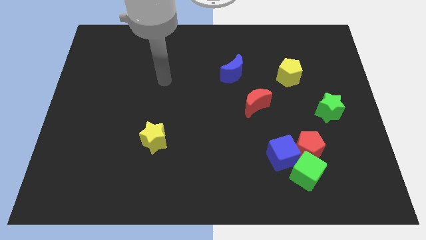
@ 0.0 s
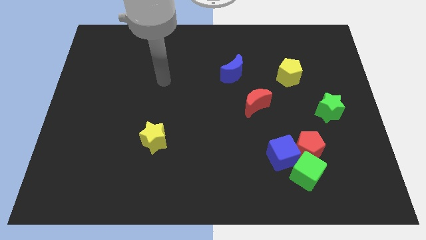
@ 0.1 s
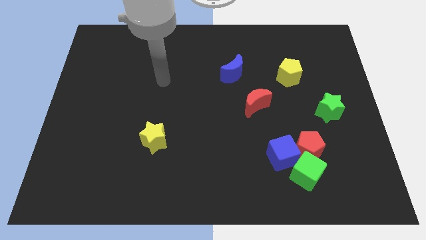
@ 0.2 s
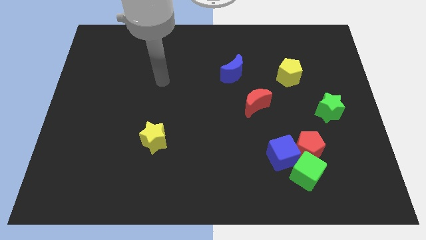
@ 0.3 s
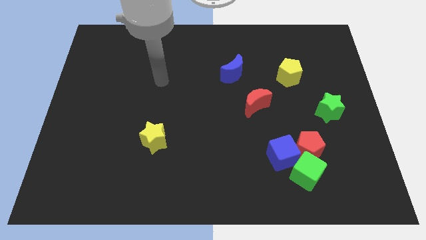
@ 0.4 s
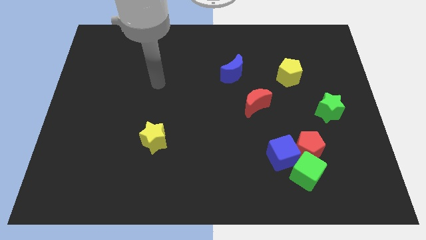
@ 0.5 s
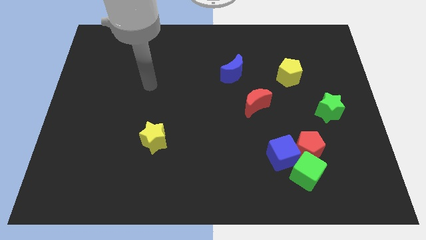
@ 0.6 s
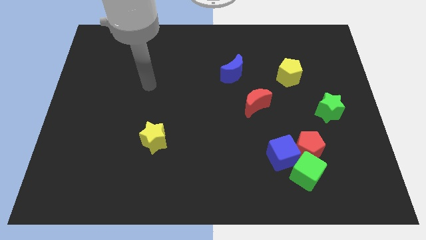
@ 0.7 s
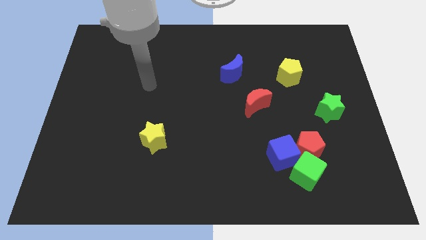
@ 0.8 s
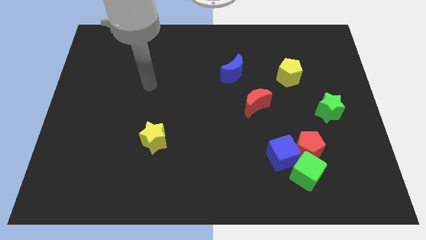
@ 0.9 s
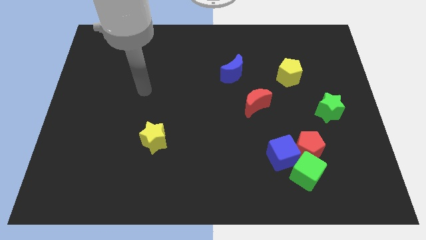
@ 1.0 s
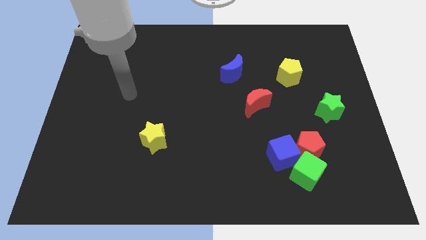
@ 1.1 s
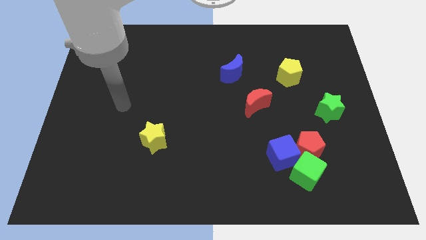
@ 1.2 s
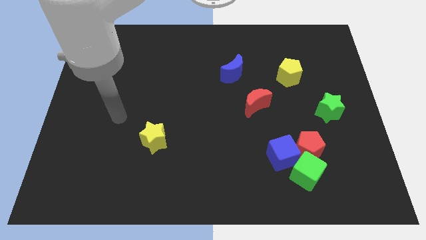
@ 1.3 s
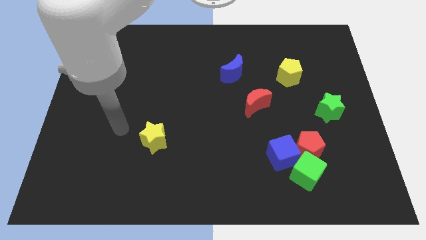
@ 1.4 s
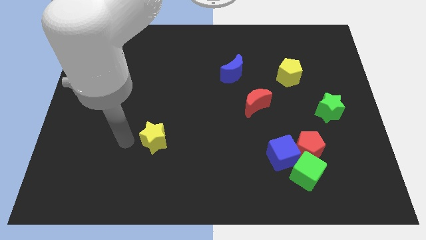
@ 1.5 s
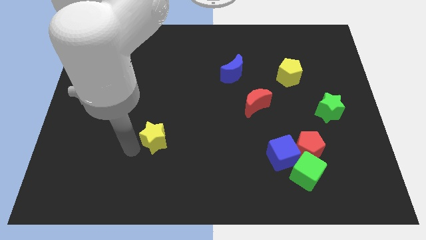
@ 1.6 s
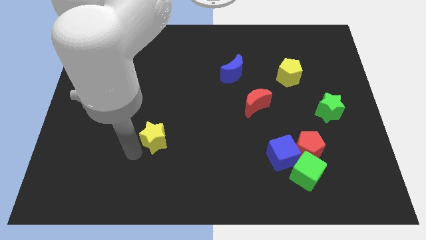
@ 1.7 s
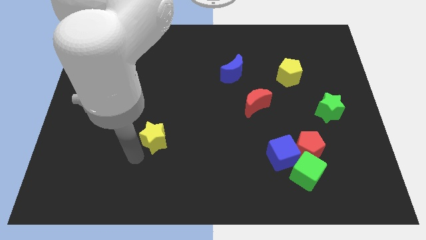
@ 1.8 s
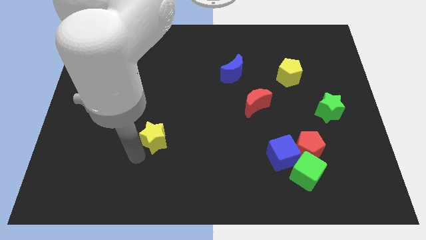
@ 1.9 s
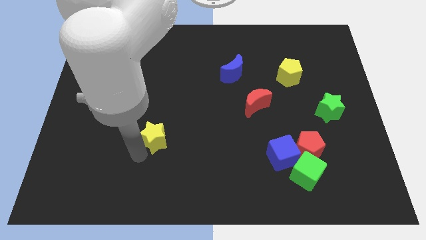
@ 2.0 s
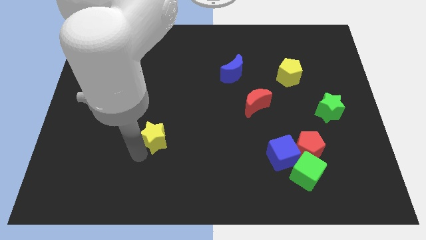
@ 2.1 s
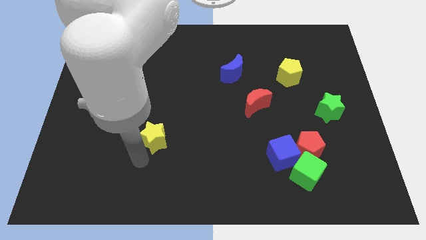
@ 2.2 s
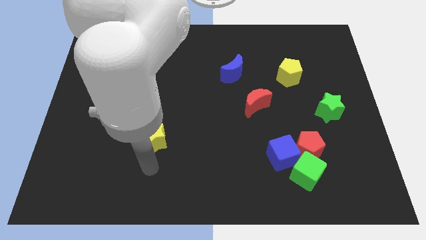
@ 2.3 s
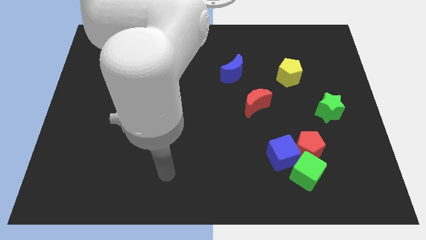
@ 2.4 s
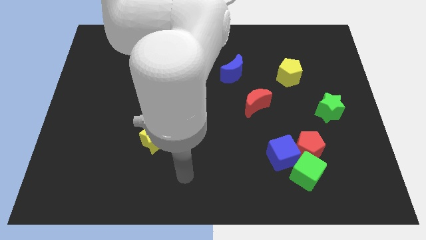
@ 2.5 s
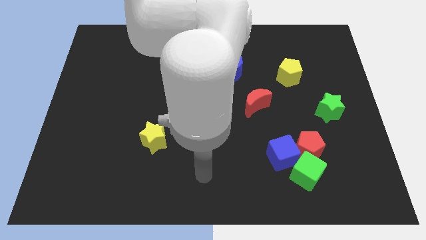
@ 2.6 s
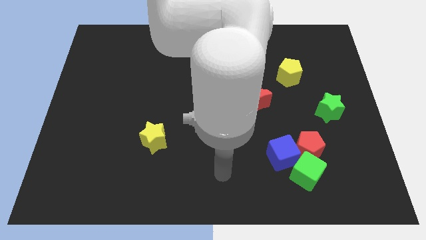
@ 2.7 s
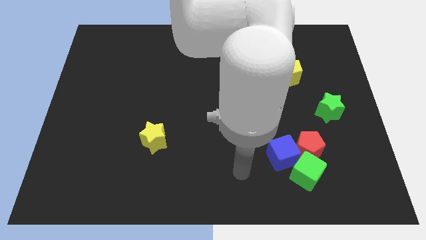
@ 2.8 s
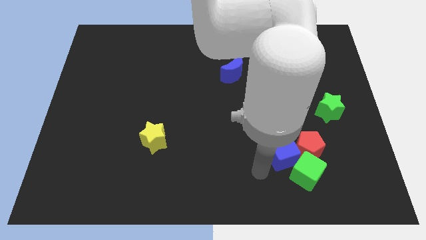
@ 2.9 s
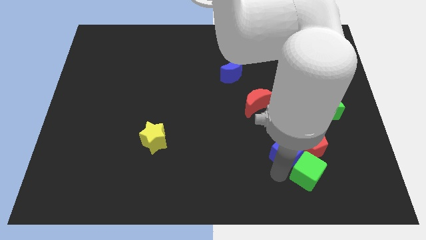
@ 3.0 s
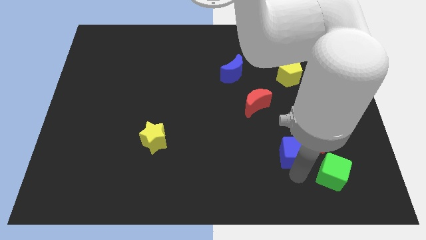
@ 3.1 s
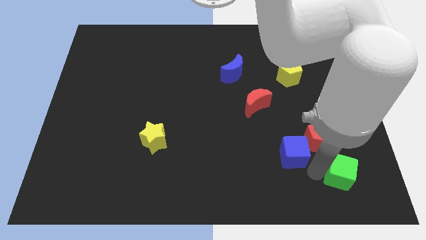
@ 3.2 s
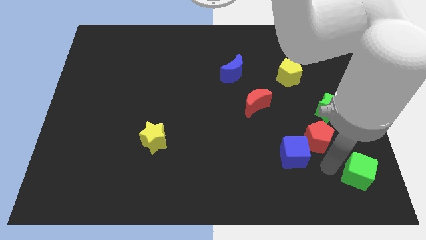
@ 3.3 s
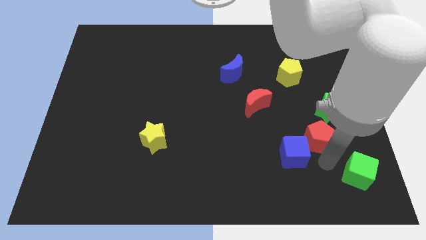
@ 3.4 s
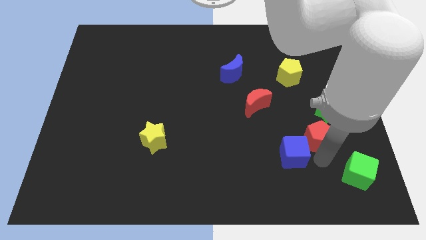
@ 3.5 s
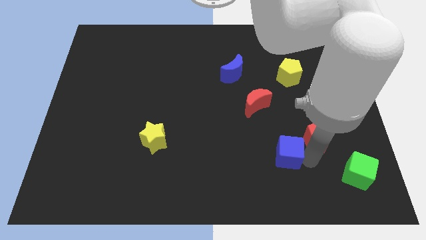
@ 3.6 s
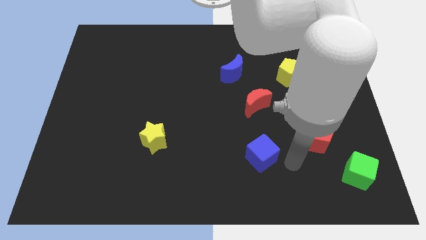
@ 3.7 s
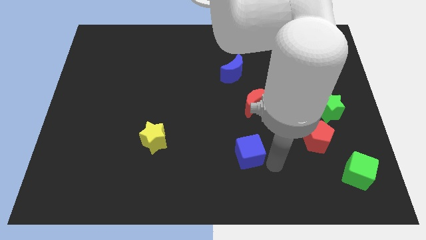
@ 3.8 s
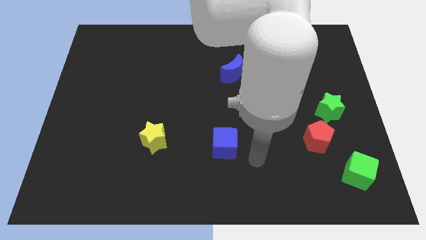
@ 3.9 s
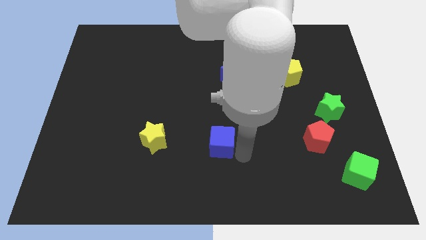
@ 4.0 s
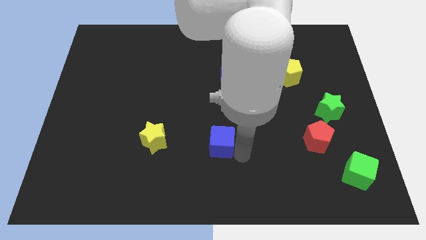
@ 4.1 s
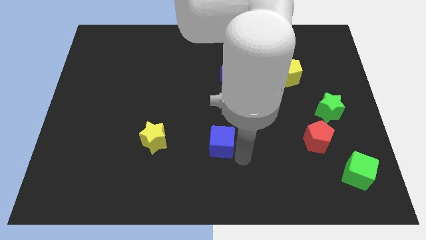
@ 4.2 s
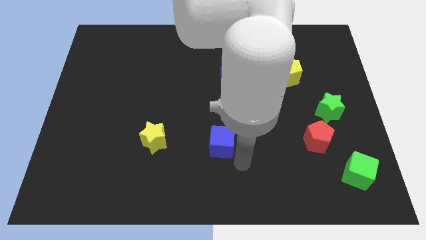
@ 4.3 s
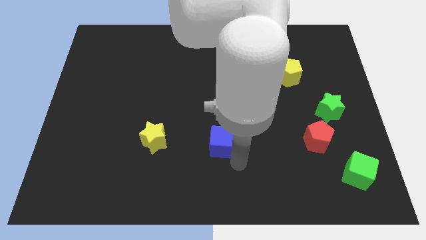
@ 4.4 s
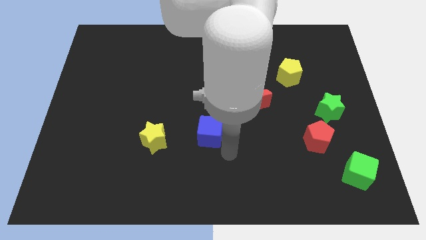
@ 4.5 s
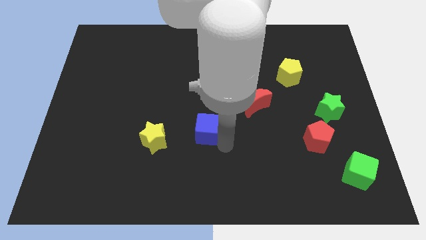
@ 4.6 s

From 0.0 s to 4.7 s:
separate the blue cube and green cube

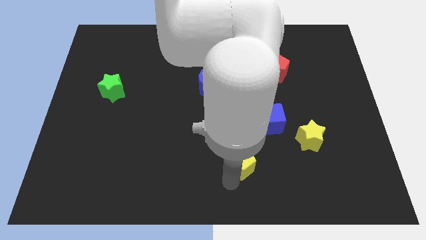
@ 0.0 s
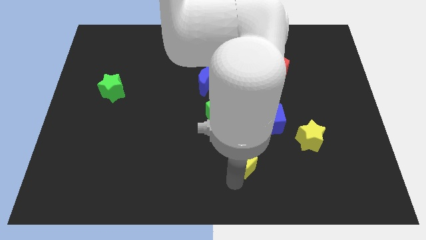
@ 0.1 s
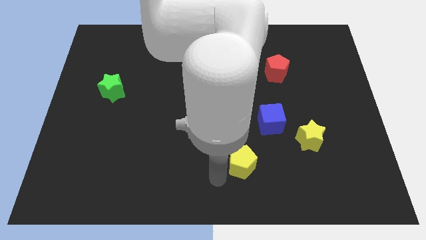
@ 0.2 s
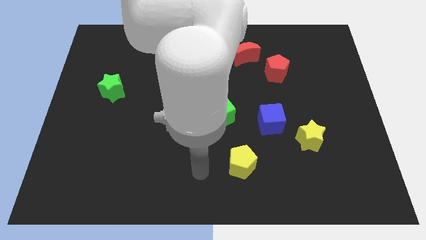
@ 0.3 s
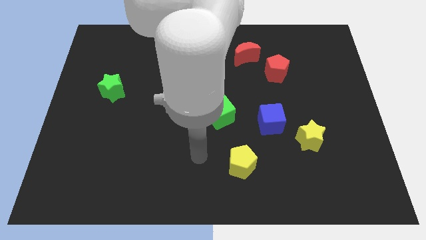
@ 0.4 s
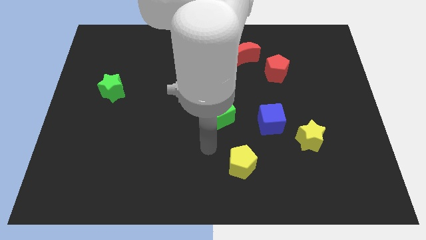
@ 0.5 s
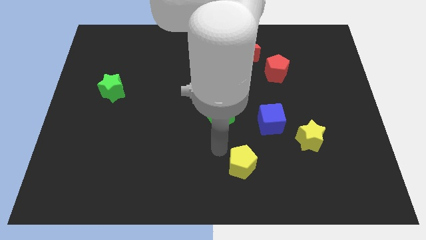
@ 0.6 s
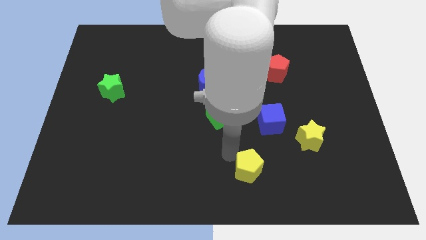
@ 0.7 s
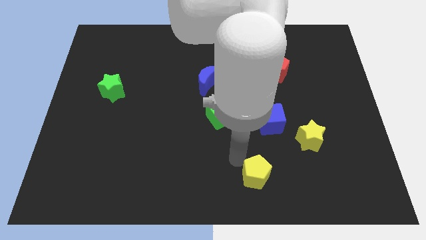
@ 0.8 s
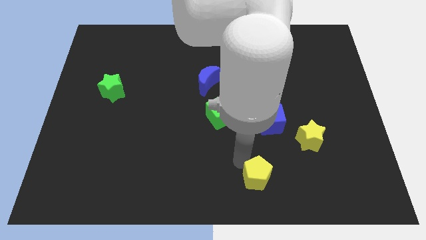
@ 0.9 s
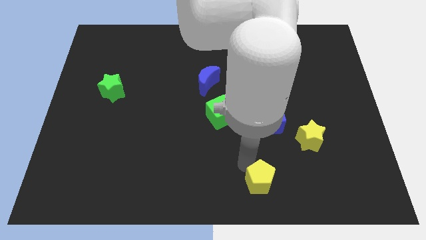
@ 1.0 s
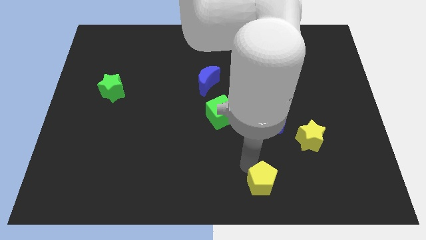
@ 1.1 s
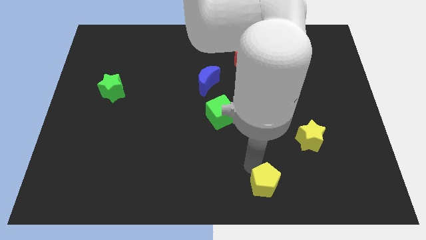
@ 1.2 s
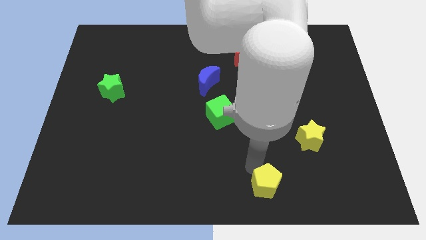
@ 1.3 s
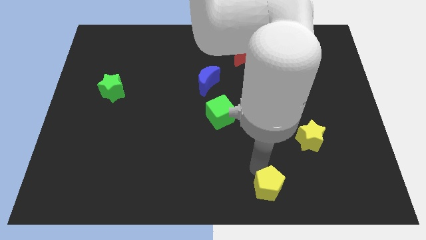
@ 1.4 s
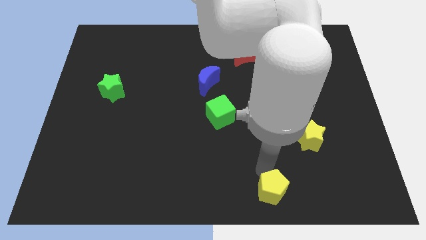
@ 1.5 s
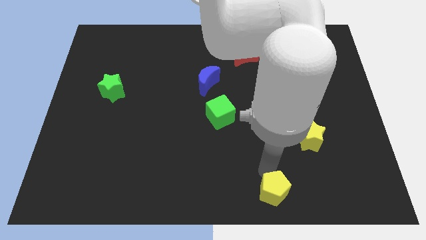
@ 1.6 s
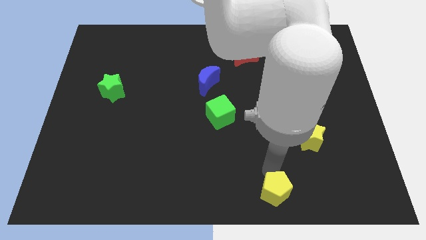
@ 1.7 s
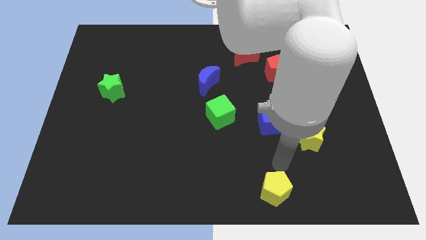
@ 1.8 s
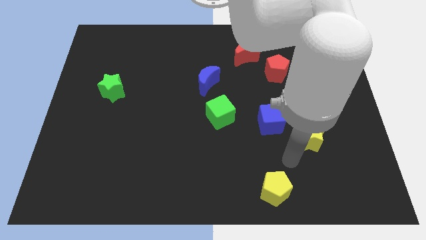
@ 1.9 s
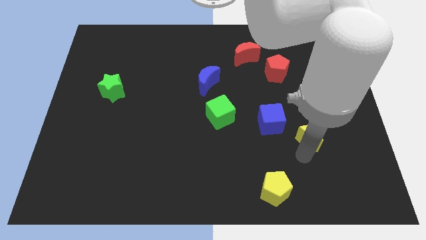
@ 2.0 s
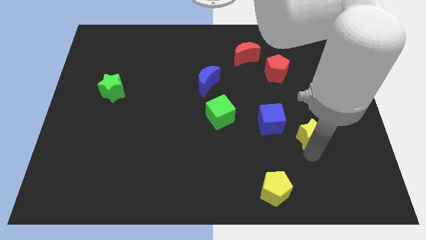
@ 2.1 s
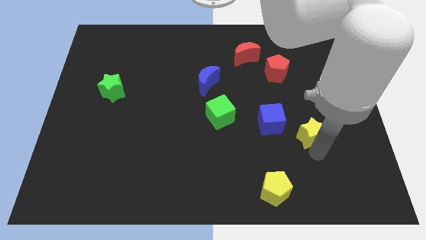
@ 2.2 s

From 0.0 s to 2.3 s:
place the yellow pentagon below the blue cube

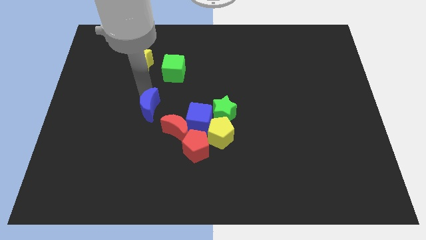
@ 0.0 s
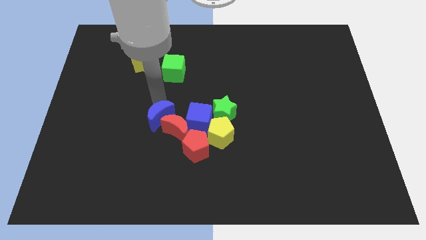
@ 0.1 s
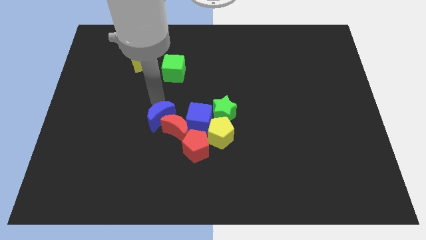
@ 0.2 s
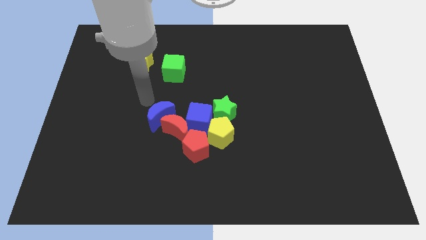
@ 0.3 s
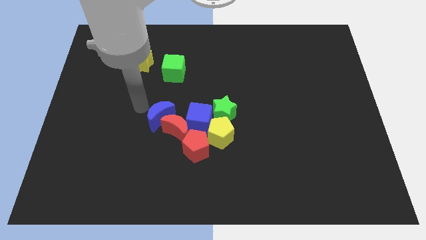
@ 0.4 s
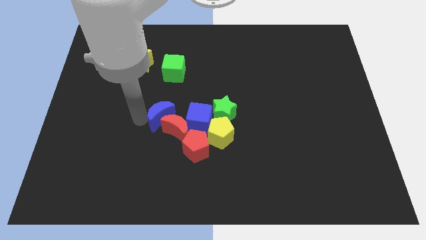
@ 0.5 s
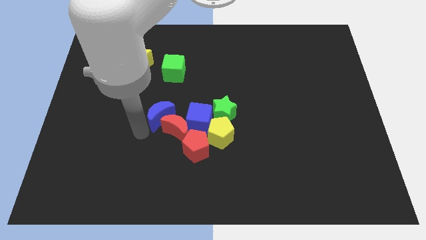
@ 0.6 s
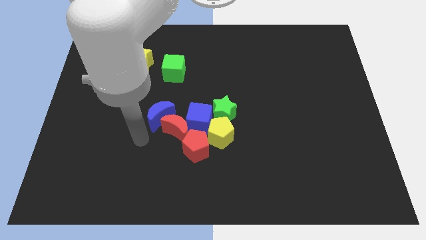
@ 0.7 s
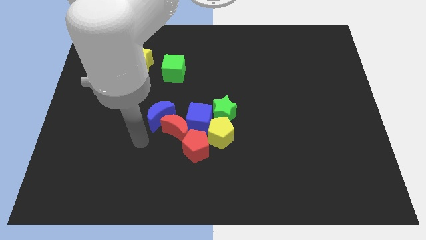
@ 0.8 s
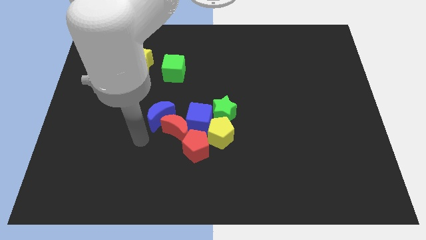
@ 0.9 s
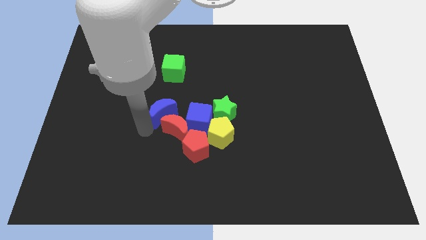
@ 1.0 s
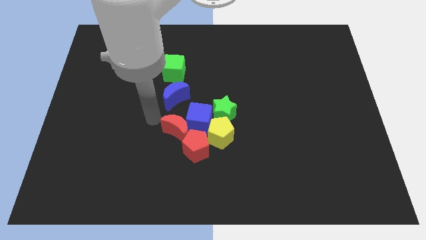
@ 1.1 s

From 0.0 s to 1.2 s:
place the blue moon to the bottom of the green cube

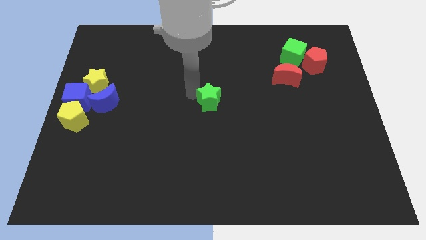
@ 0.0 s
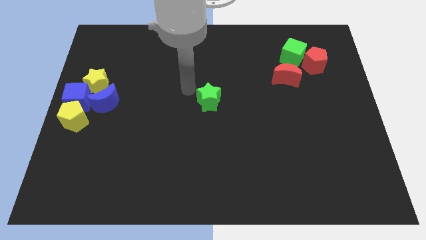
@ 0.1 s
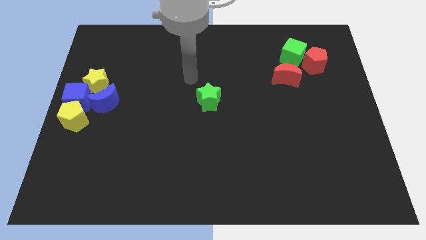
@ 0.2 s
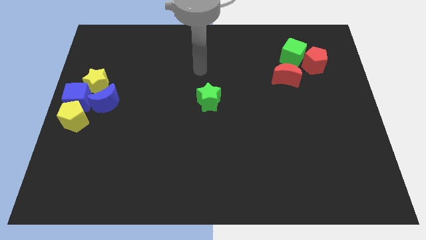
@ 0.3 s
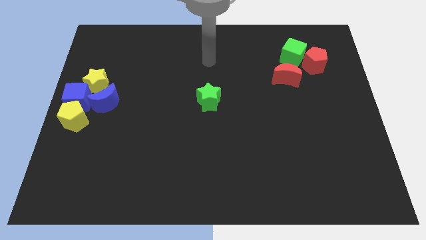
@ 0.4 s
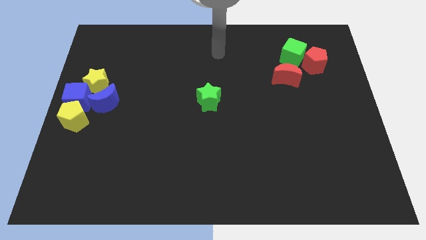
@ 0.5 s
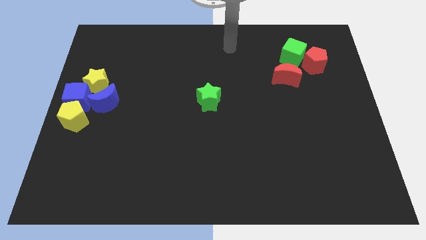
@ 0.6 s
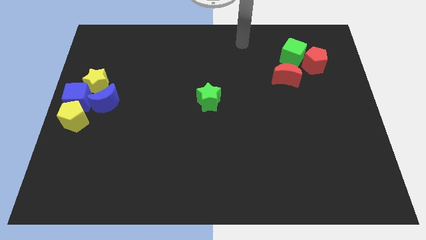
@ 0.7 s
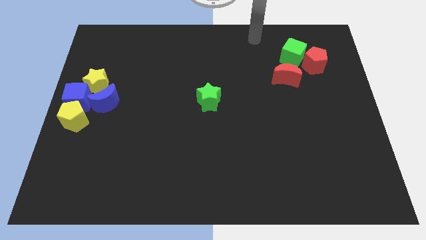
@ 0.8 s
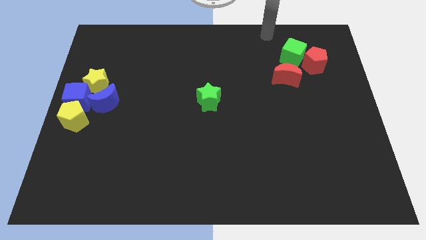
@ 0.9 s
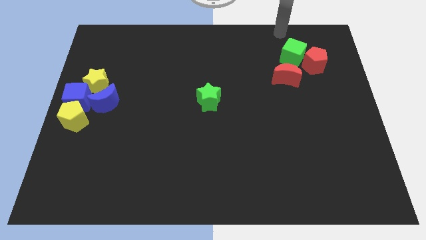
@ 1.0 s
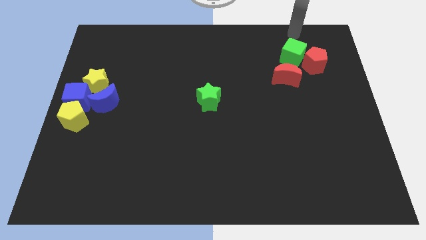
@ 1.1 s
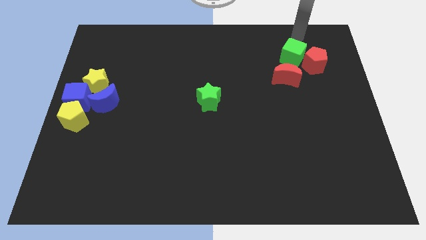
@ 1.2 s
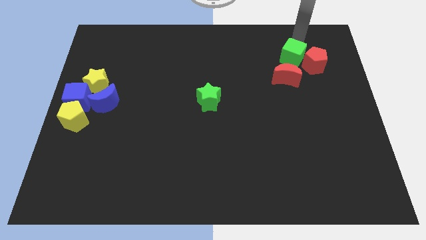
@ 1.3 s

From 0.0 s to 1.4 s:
move the arm to the top of the green cube
